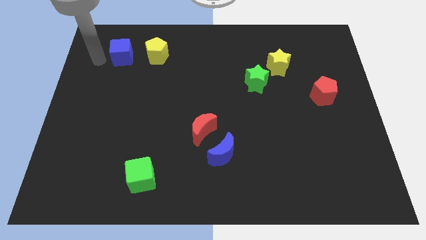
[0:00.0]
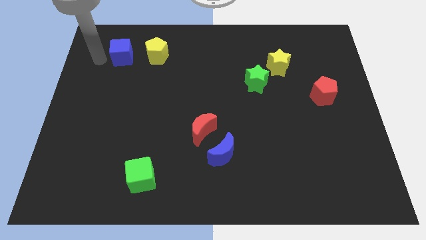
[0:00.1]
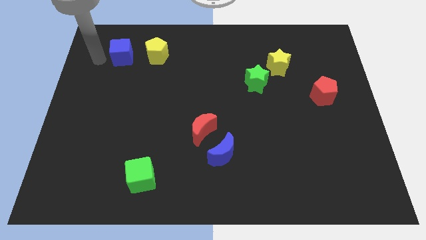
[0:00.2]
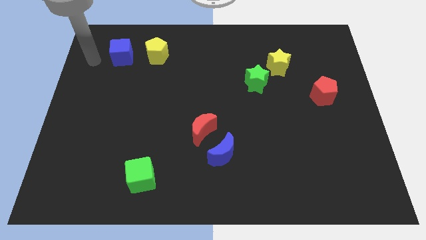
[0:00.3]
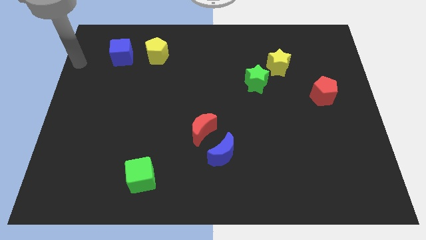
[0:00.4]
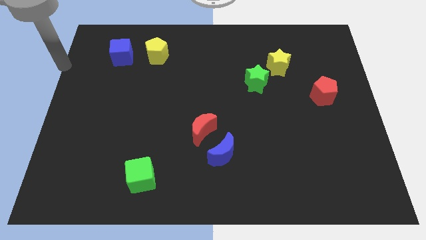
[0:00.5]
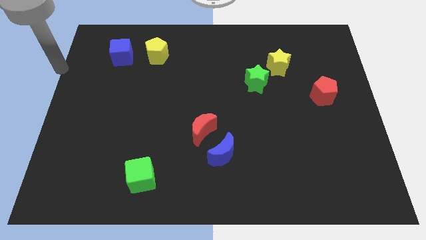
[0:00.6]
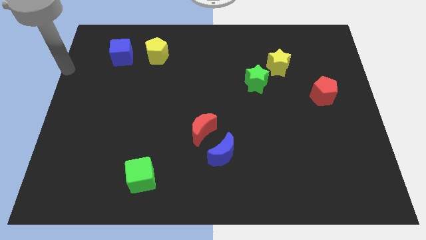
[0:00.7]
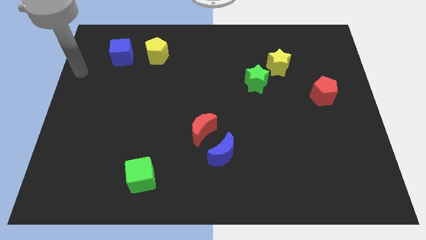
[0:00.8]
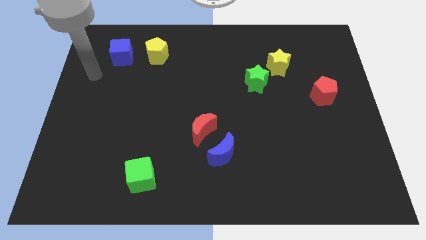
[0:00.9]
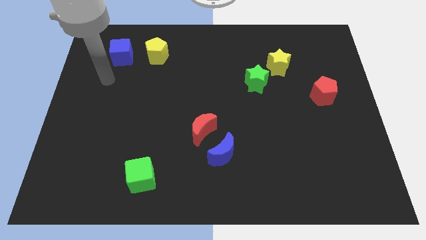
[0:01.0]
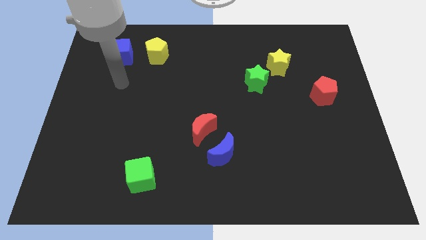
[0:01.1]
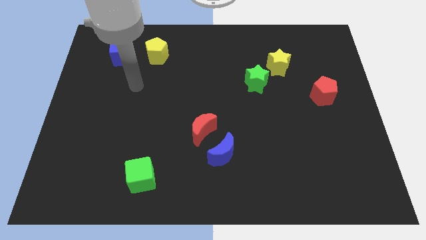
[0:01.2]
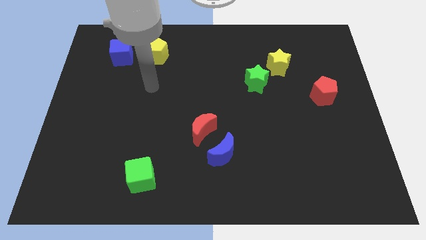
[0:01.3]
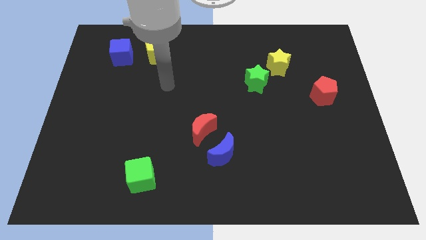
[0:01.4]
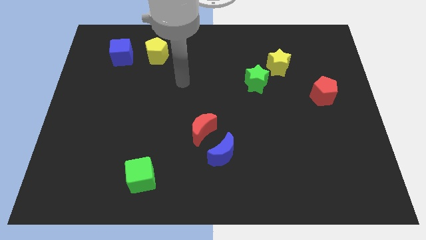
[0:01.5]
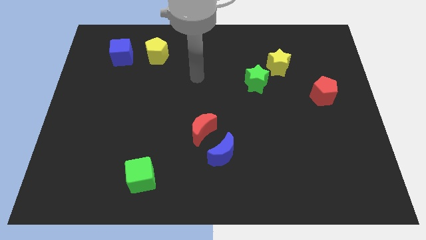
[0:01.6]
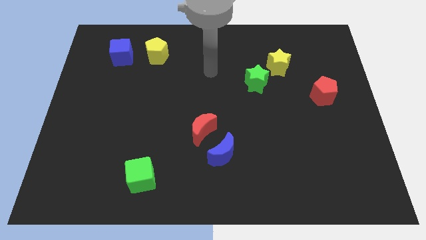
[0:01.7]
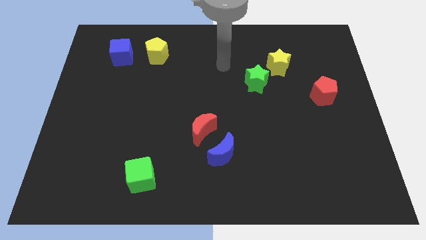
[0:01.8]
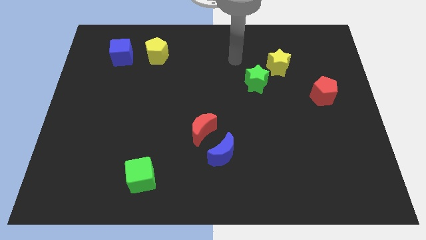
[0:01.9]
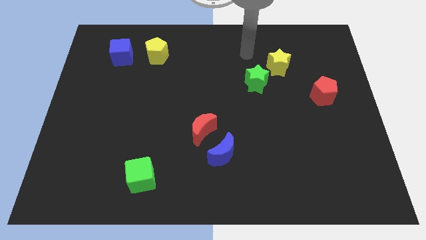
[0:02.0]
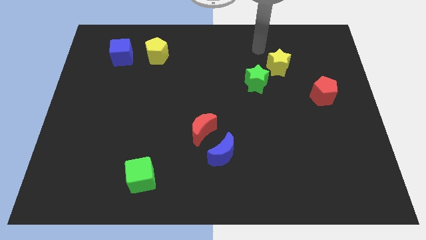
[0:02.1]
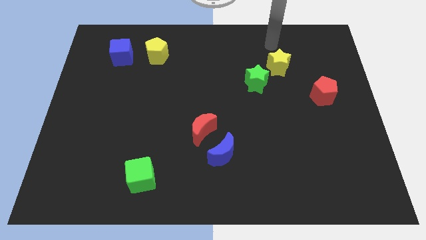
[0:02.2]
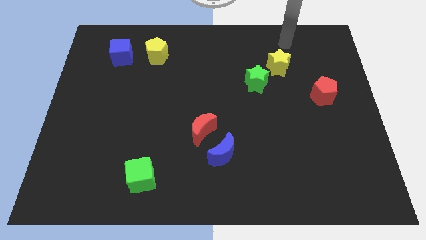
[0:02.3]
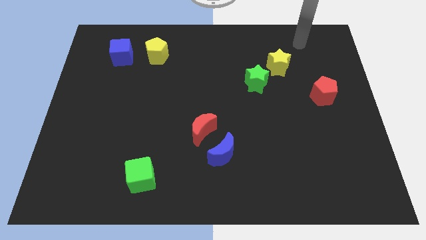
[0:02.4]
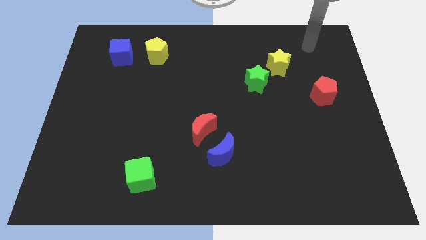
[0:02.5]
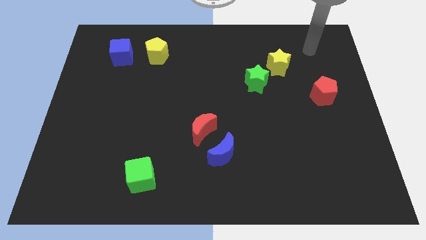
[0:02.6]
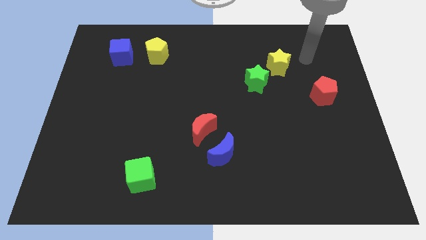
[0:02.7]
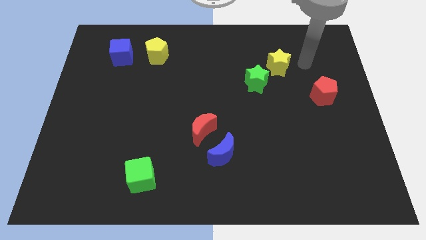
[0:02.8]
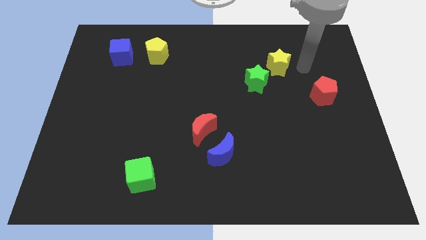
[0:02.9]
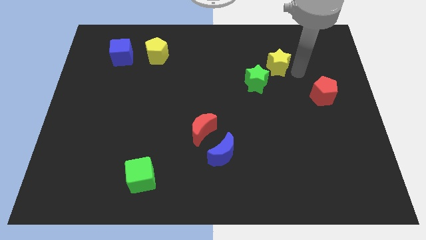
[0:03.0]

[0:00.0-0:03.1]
point your arm to the right side of yellow star

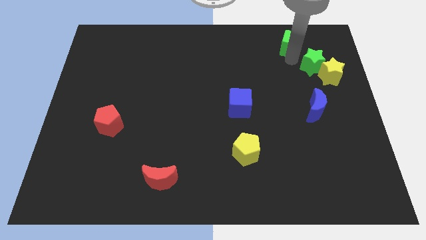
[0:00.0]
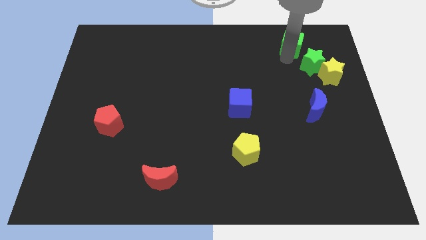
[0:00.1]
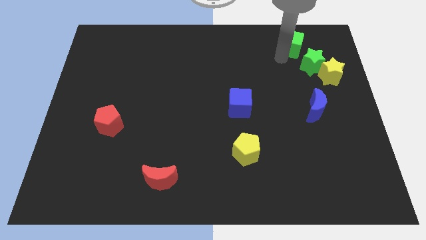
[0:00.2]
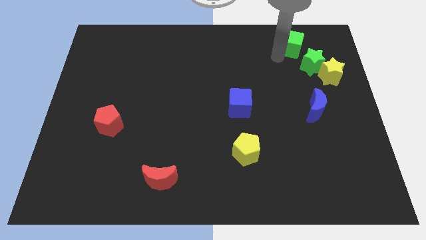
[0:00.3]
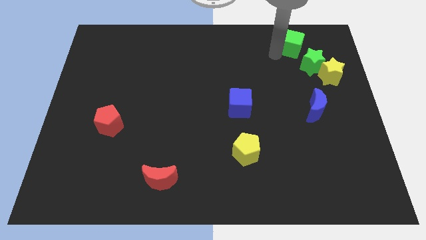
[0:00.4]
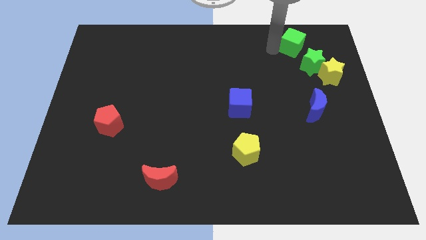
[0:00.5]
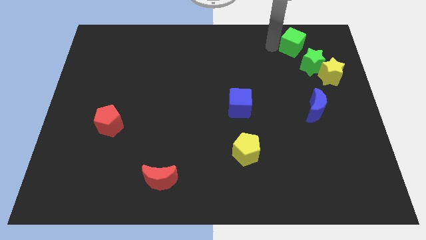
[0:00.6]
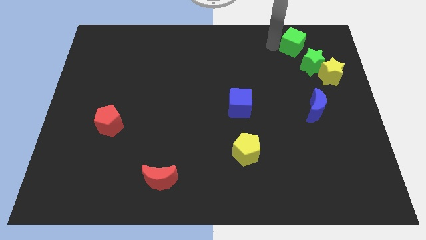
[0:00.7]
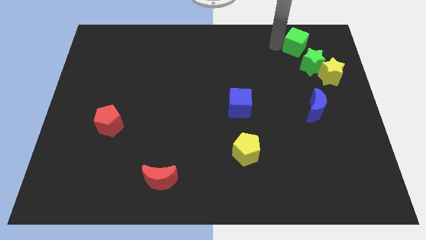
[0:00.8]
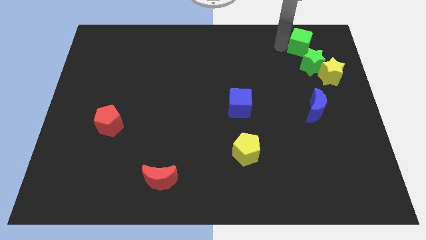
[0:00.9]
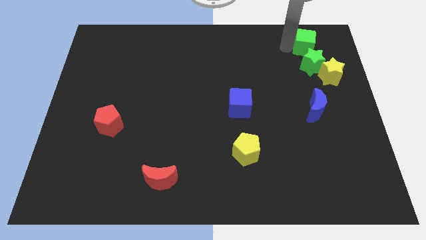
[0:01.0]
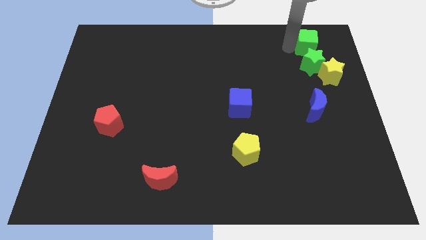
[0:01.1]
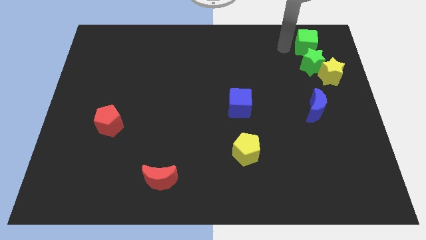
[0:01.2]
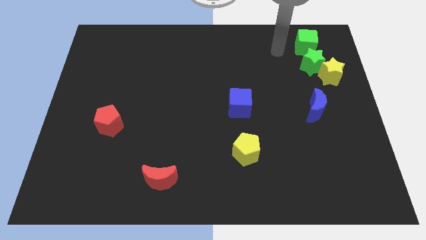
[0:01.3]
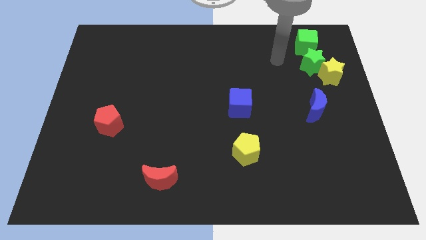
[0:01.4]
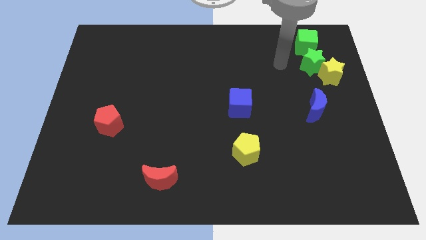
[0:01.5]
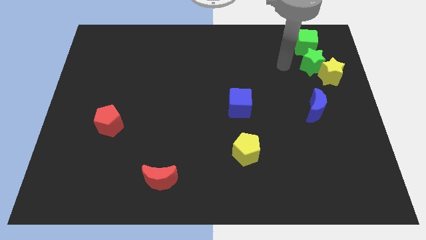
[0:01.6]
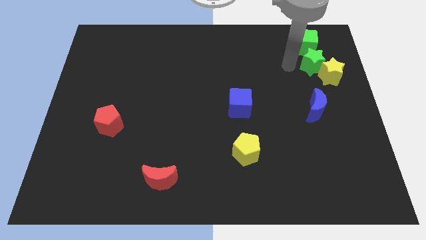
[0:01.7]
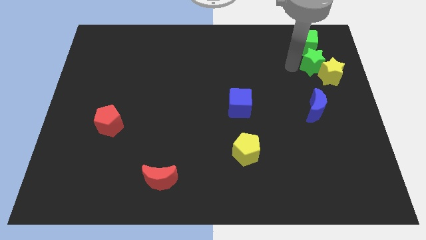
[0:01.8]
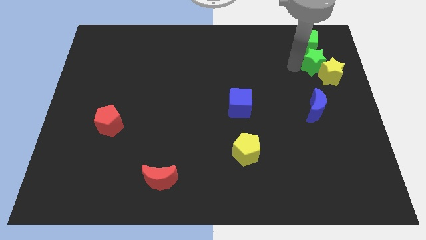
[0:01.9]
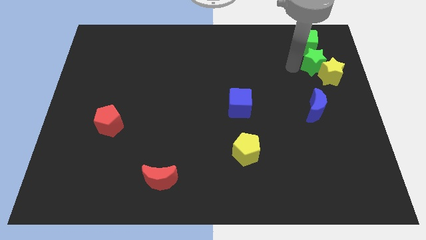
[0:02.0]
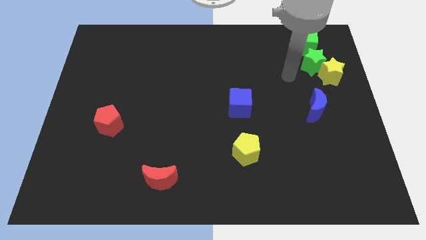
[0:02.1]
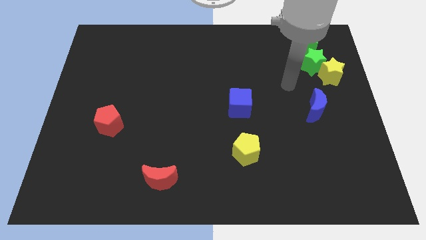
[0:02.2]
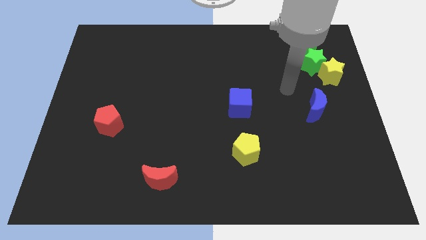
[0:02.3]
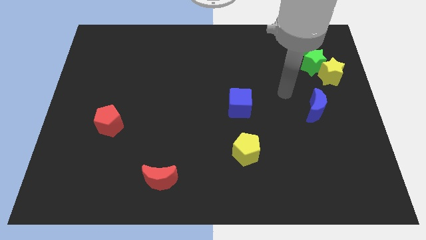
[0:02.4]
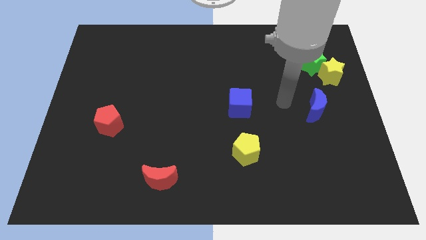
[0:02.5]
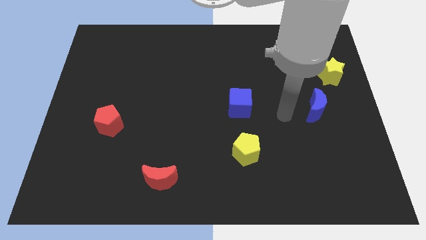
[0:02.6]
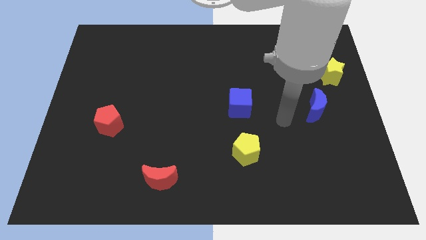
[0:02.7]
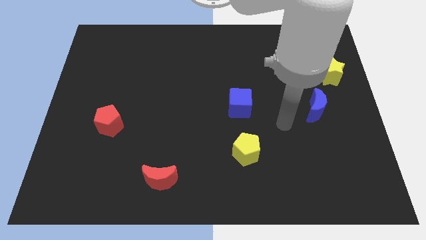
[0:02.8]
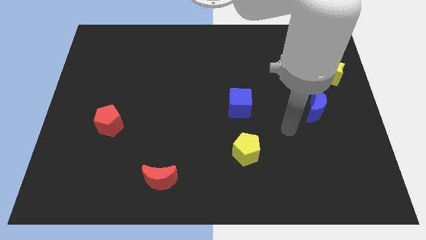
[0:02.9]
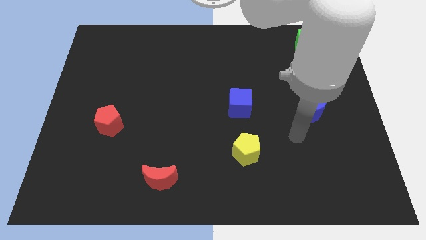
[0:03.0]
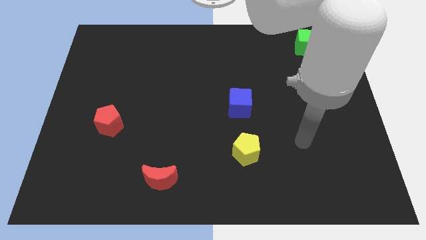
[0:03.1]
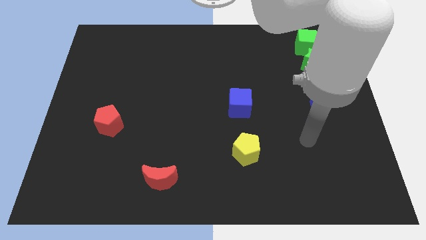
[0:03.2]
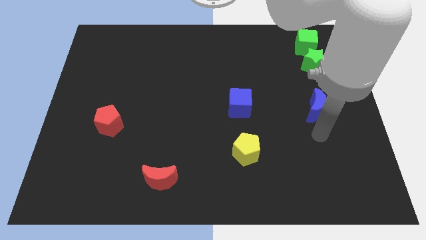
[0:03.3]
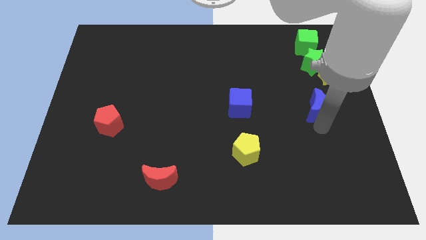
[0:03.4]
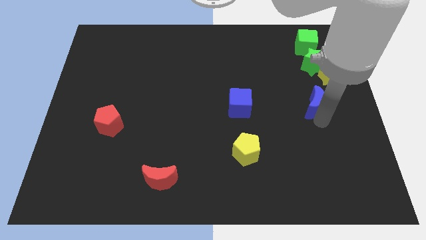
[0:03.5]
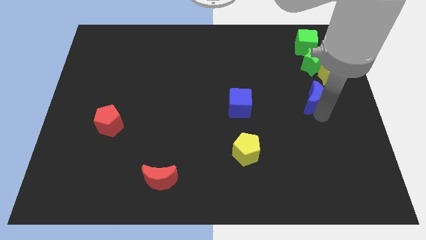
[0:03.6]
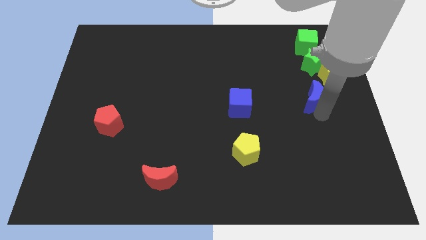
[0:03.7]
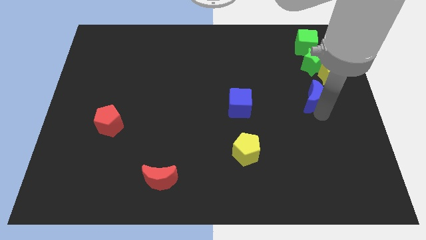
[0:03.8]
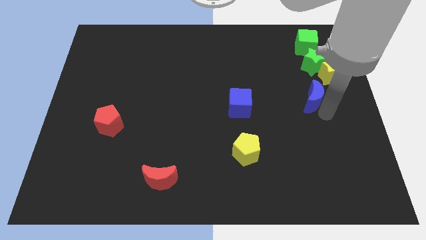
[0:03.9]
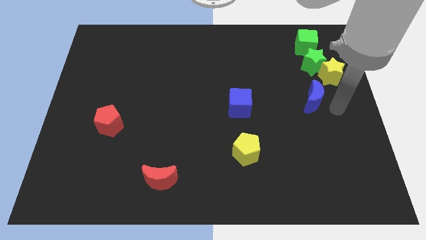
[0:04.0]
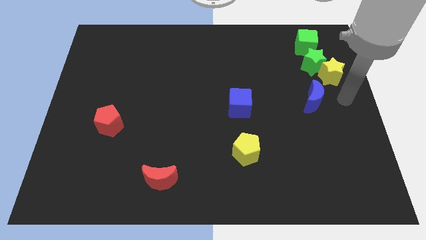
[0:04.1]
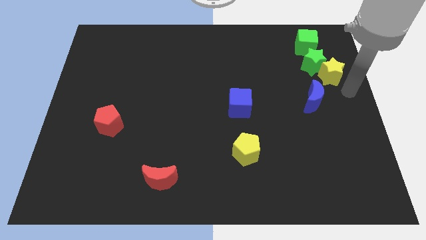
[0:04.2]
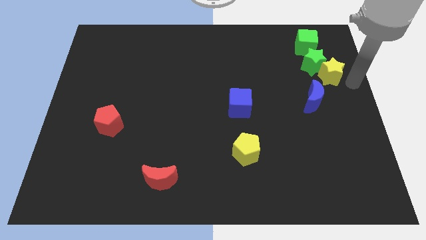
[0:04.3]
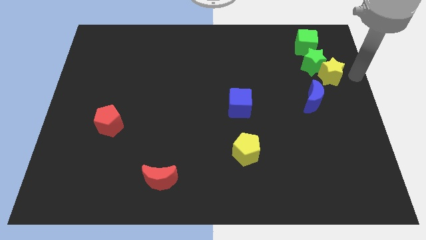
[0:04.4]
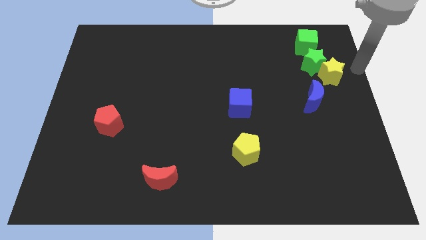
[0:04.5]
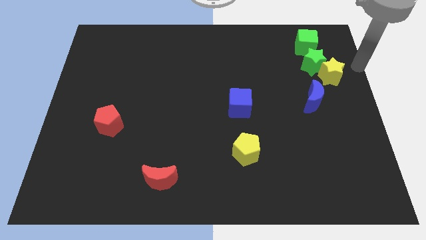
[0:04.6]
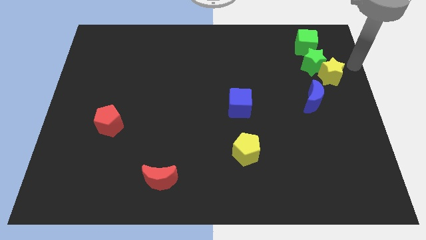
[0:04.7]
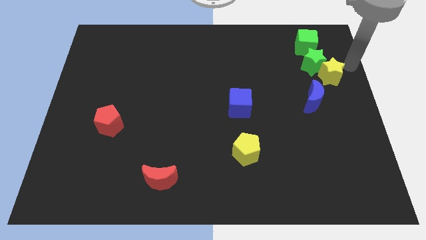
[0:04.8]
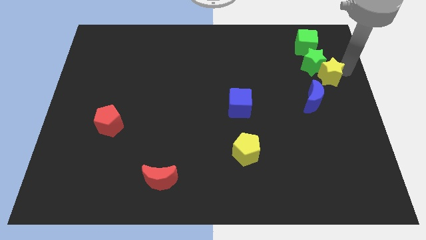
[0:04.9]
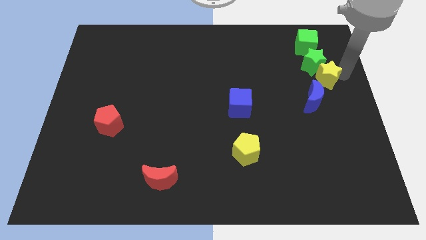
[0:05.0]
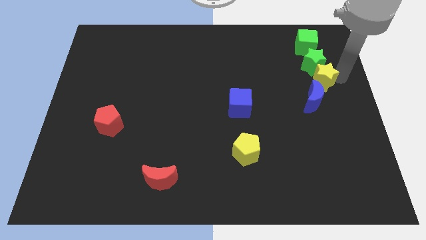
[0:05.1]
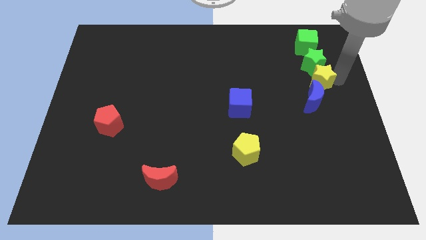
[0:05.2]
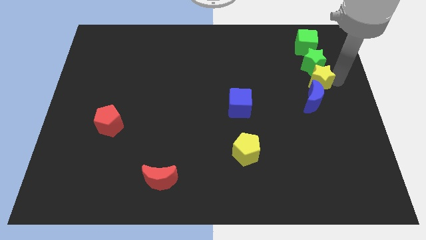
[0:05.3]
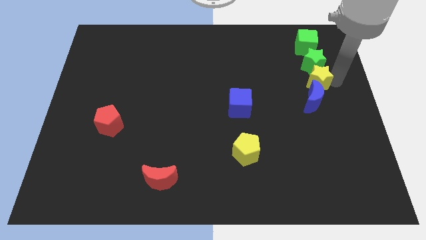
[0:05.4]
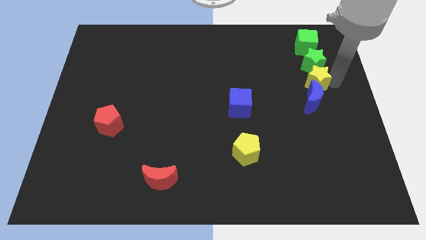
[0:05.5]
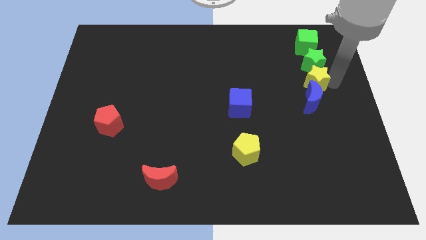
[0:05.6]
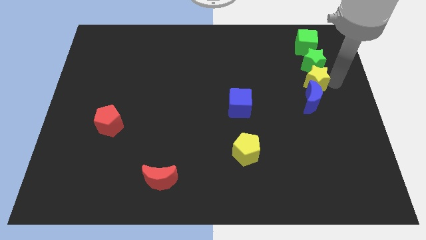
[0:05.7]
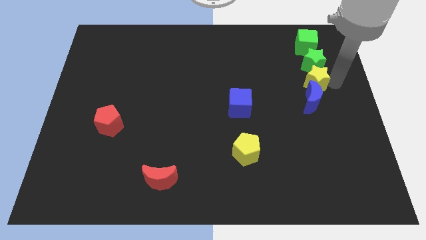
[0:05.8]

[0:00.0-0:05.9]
form a vertical line with the group of green blocks yellow star and blue crescent at the top right side of the board
